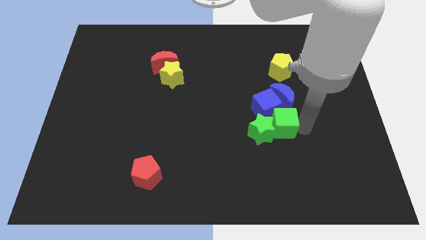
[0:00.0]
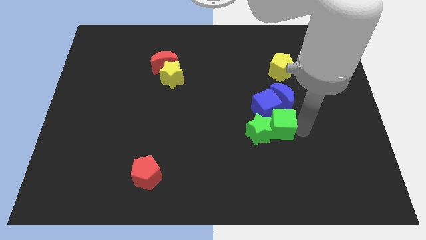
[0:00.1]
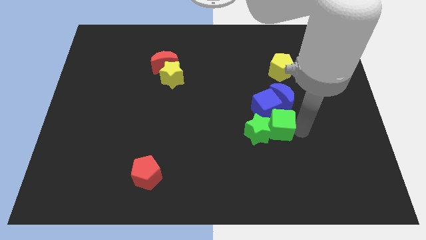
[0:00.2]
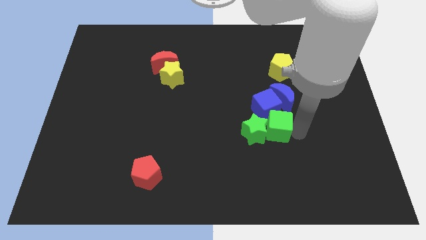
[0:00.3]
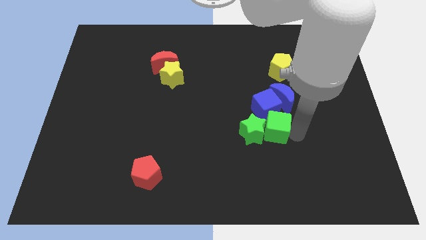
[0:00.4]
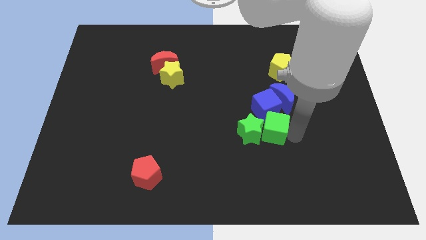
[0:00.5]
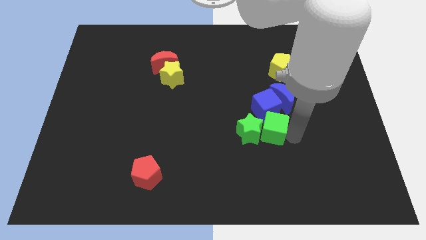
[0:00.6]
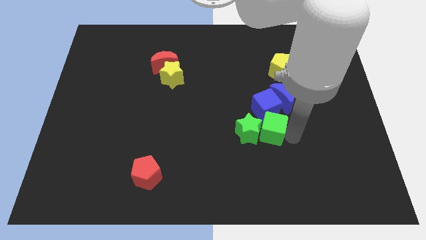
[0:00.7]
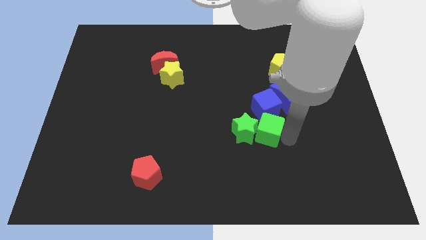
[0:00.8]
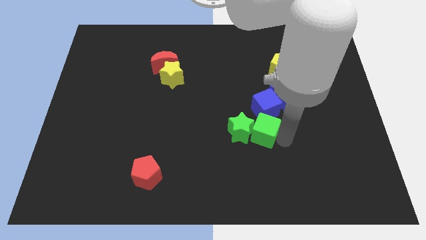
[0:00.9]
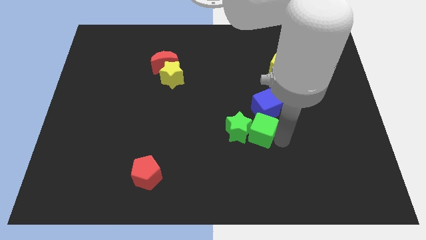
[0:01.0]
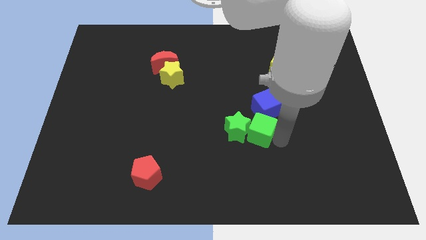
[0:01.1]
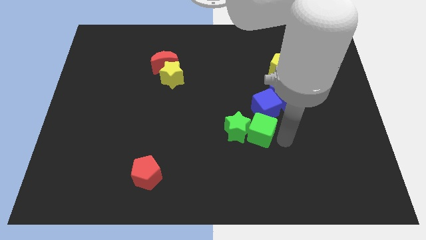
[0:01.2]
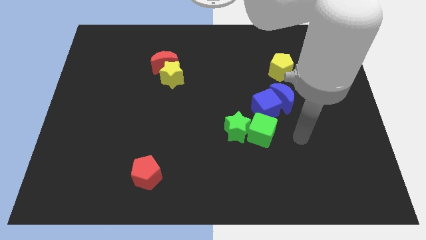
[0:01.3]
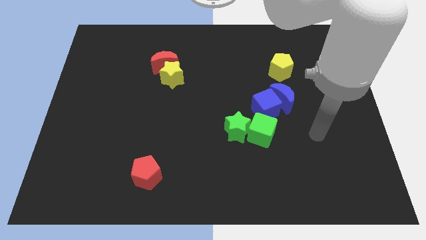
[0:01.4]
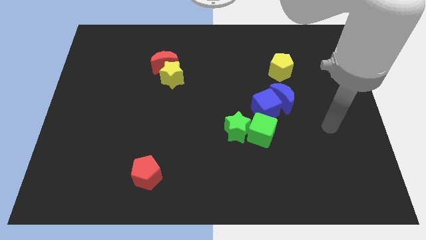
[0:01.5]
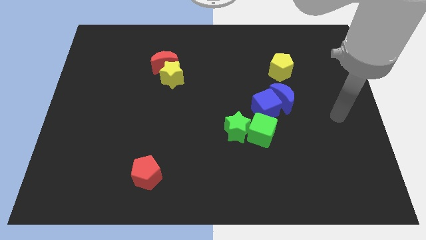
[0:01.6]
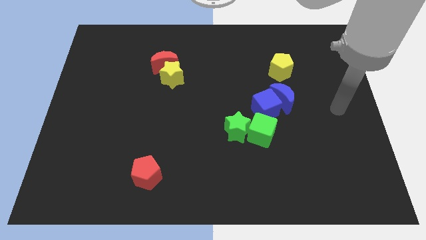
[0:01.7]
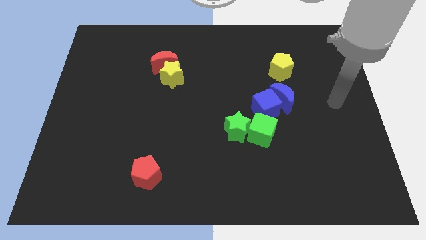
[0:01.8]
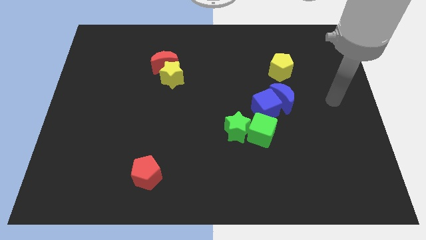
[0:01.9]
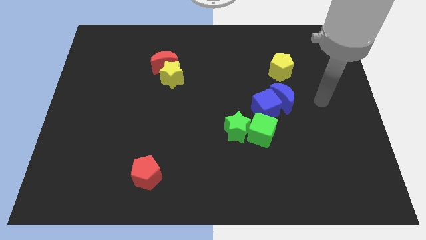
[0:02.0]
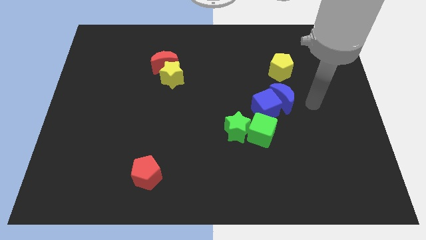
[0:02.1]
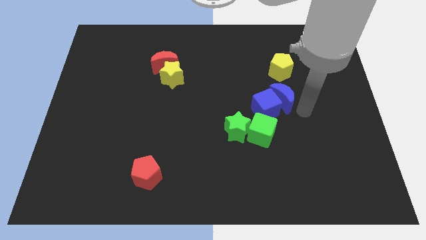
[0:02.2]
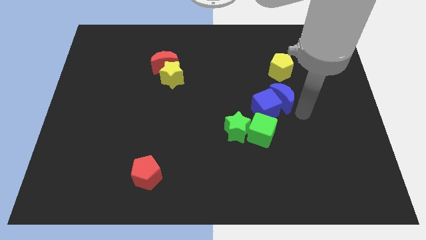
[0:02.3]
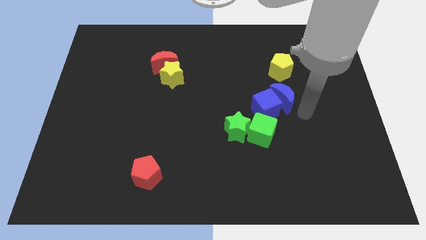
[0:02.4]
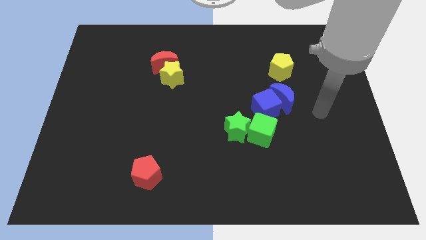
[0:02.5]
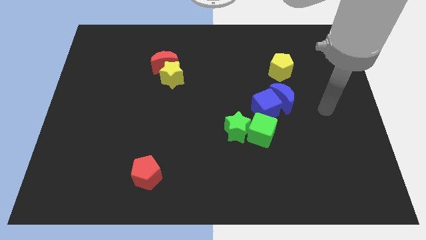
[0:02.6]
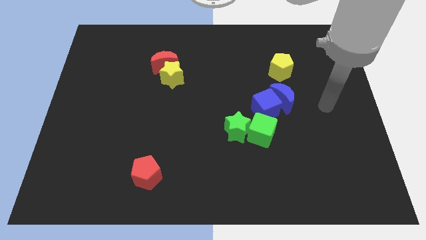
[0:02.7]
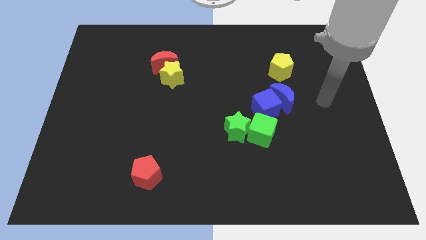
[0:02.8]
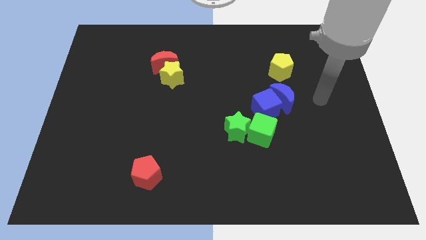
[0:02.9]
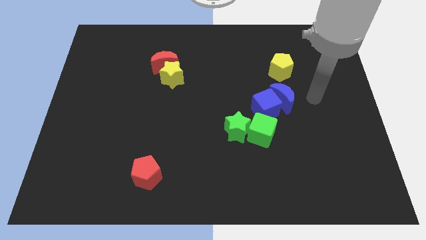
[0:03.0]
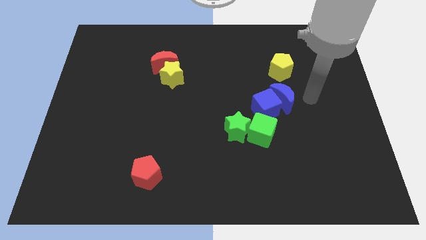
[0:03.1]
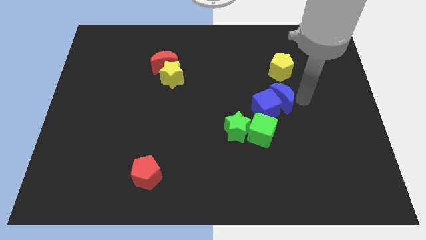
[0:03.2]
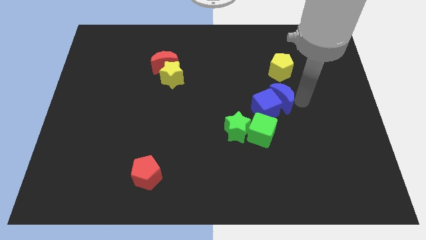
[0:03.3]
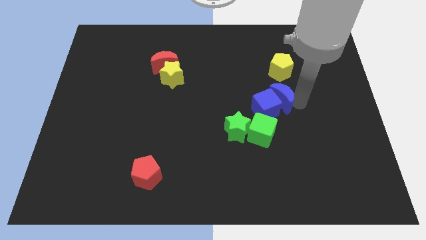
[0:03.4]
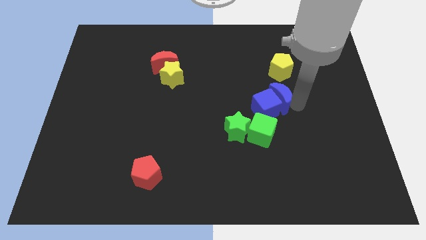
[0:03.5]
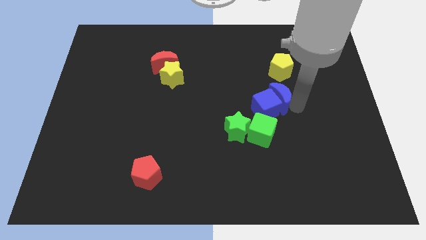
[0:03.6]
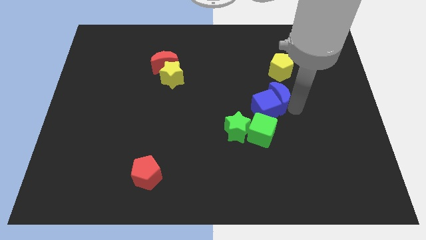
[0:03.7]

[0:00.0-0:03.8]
move the green blocks to the left side

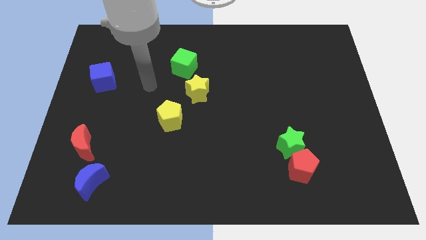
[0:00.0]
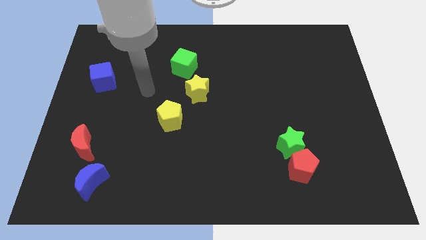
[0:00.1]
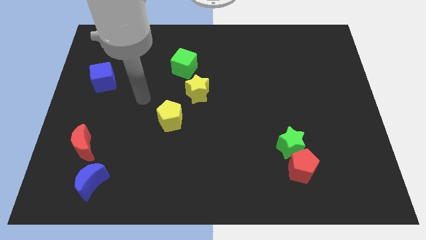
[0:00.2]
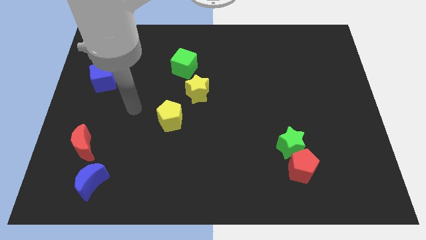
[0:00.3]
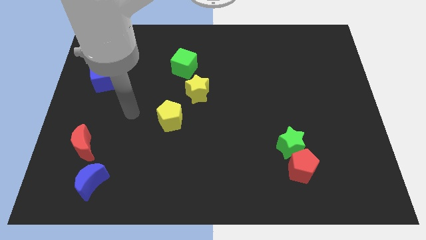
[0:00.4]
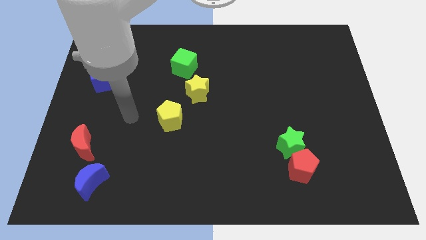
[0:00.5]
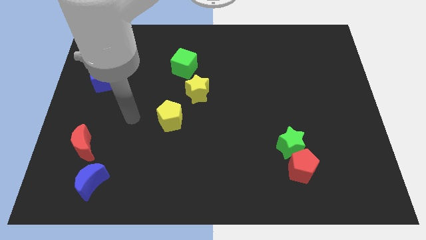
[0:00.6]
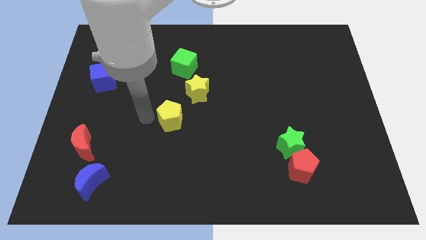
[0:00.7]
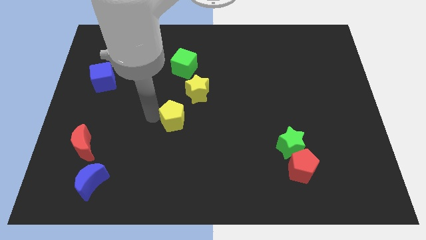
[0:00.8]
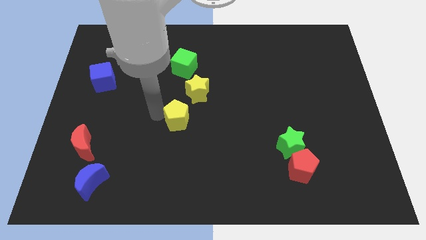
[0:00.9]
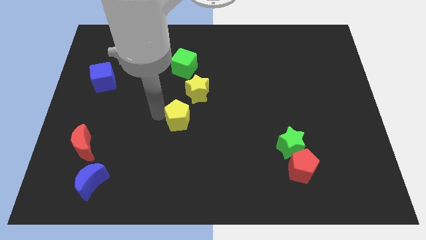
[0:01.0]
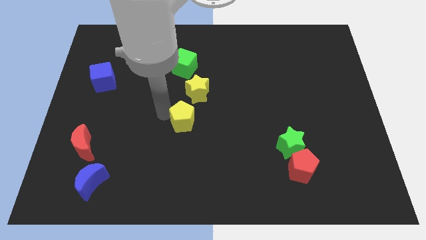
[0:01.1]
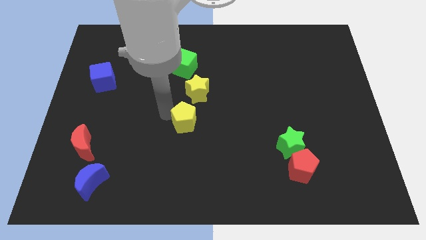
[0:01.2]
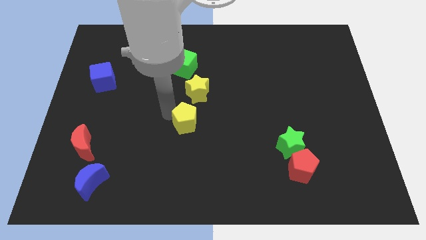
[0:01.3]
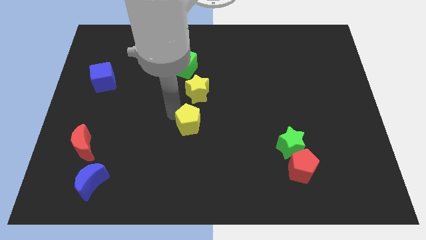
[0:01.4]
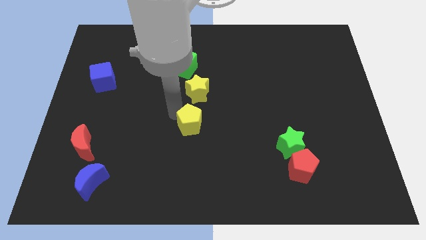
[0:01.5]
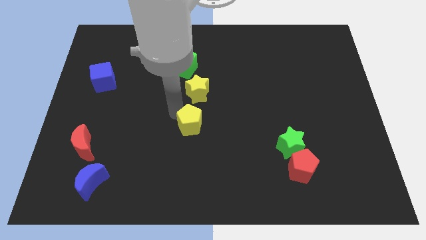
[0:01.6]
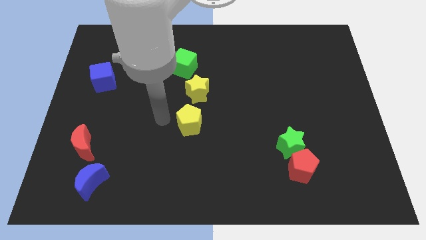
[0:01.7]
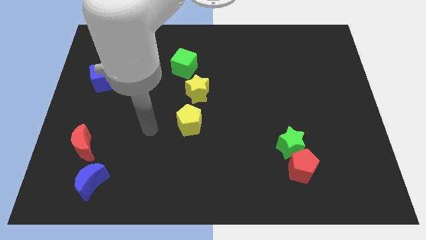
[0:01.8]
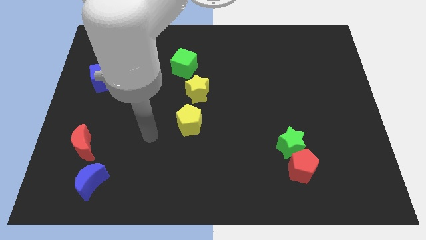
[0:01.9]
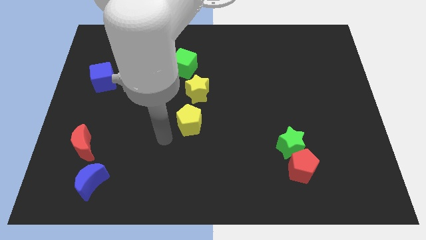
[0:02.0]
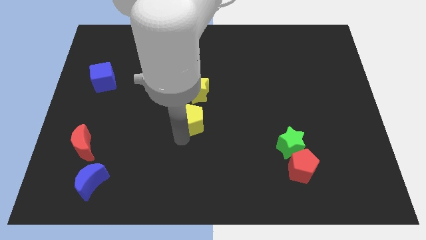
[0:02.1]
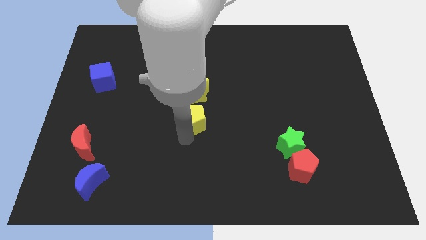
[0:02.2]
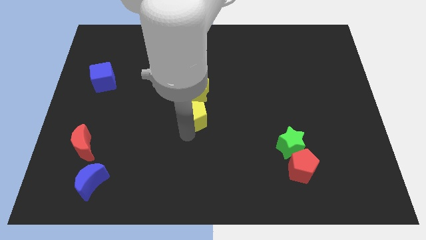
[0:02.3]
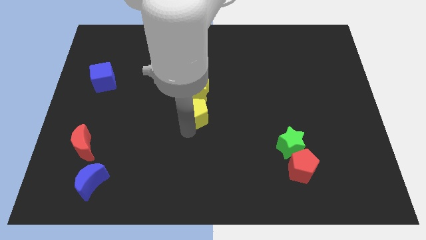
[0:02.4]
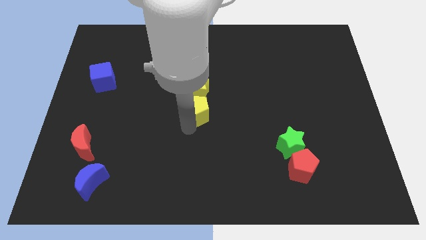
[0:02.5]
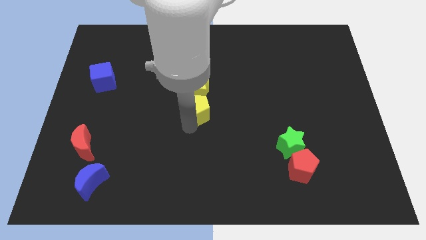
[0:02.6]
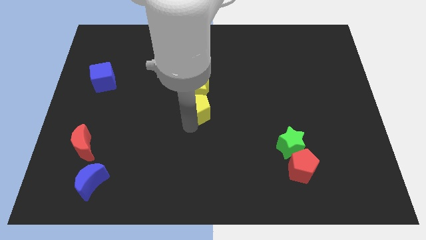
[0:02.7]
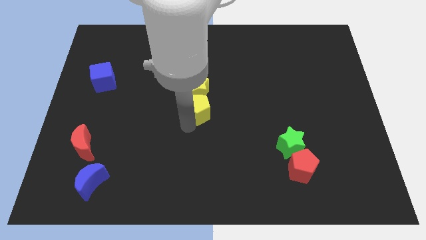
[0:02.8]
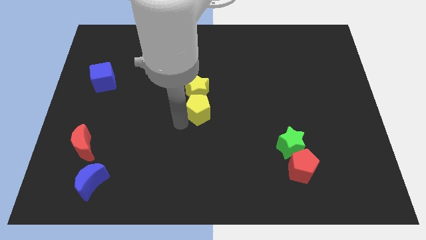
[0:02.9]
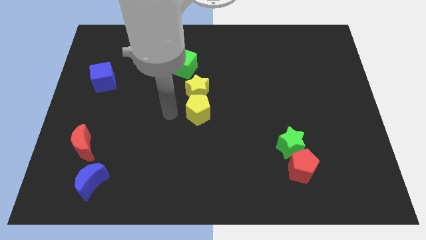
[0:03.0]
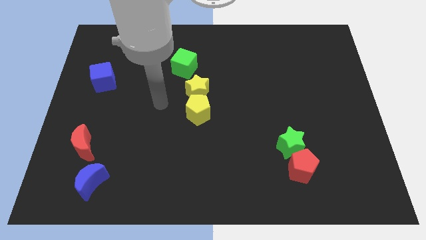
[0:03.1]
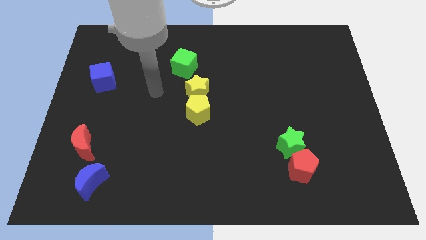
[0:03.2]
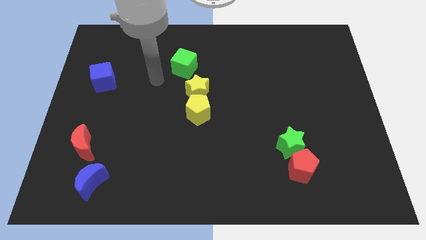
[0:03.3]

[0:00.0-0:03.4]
move the yellow pentagon to the bottom of the yellow star

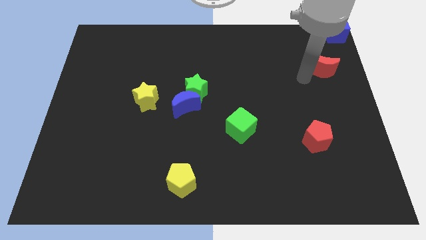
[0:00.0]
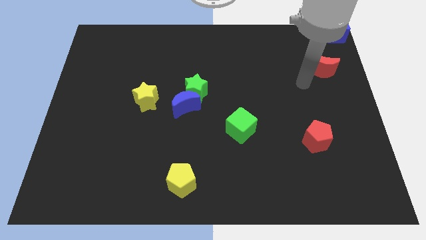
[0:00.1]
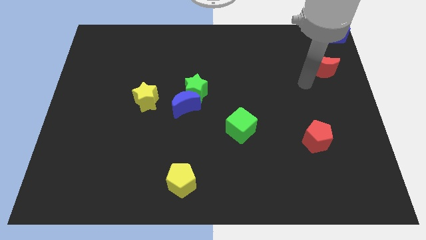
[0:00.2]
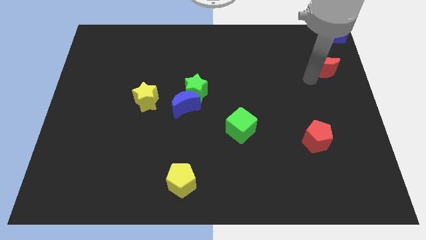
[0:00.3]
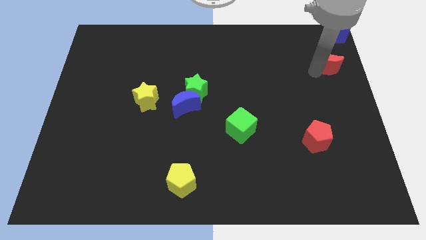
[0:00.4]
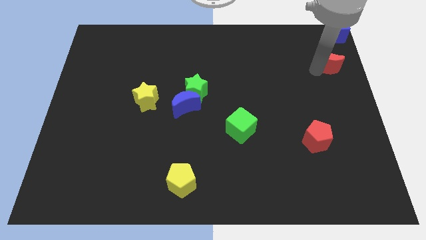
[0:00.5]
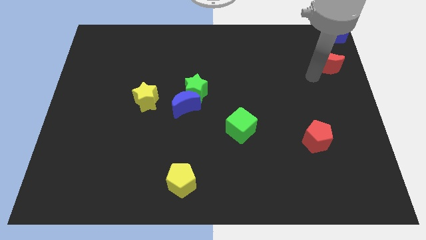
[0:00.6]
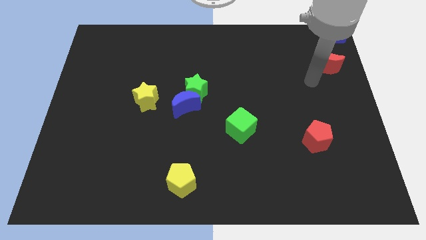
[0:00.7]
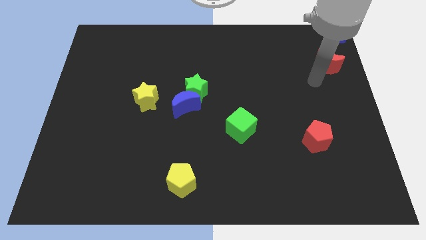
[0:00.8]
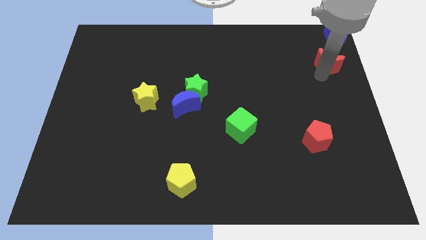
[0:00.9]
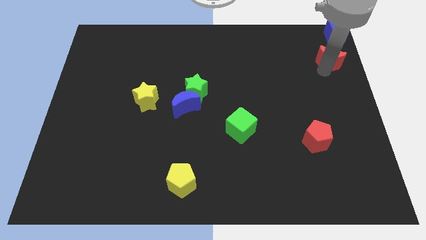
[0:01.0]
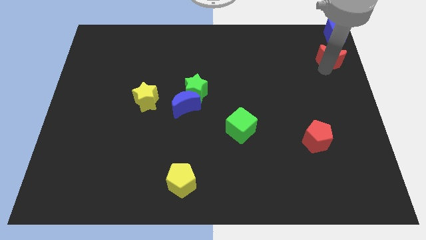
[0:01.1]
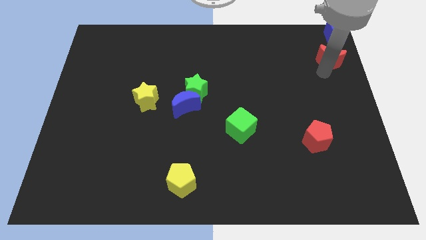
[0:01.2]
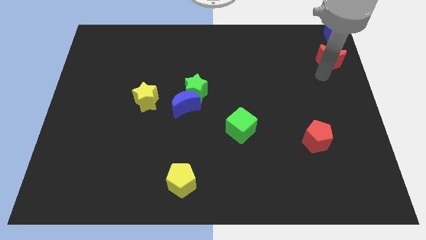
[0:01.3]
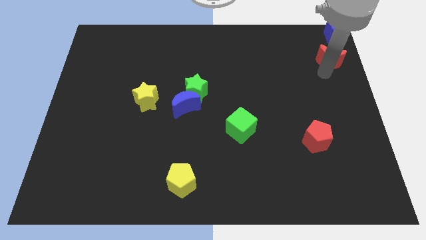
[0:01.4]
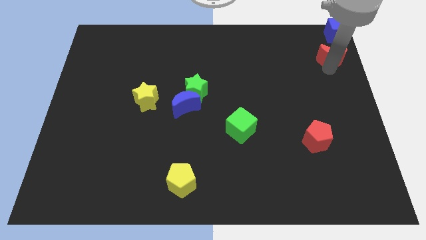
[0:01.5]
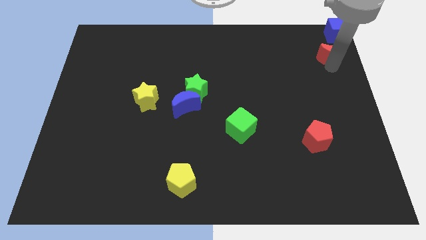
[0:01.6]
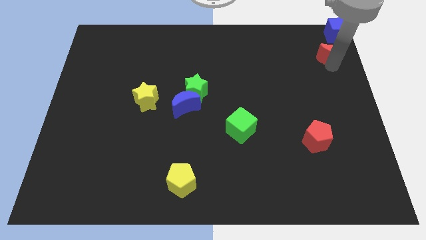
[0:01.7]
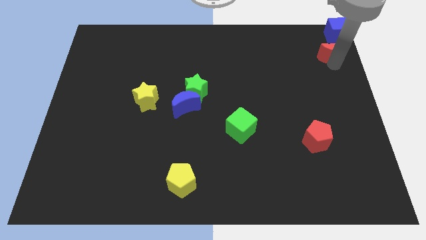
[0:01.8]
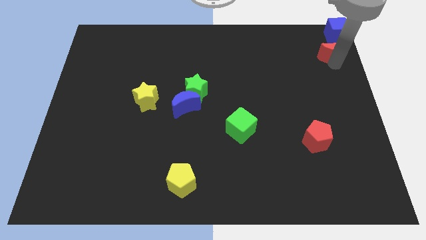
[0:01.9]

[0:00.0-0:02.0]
move the red crescent below the blue cube
